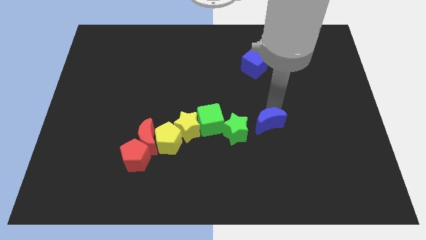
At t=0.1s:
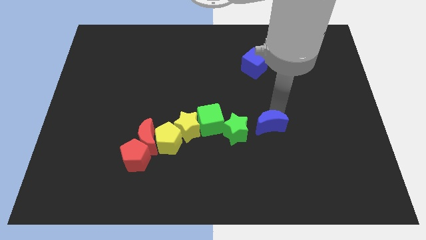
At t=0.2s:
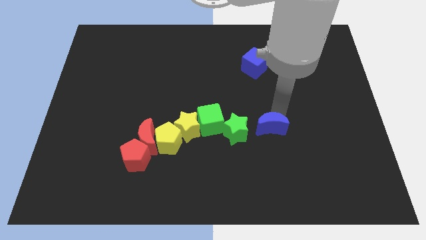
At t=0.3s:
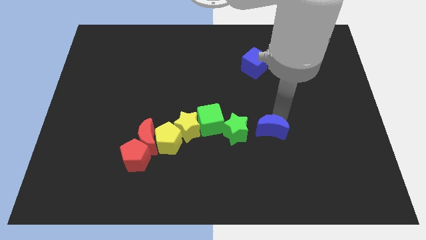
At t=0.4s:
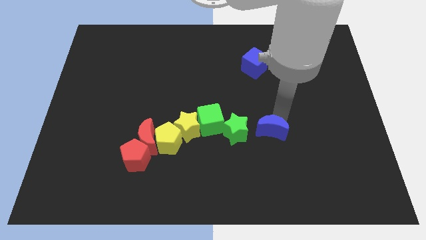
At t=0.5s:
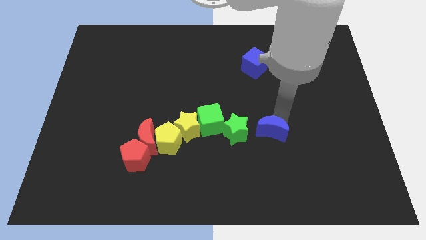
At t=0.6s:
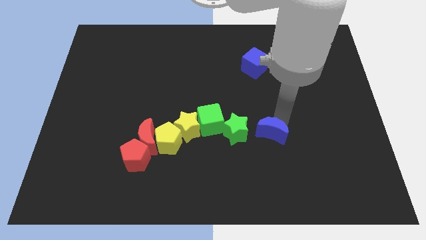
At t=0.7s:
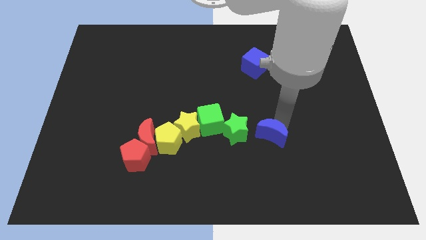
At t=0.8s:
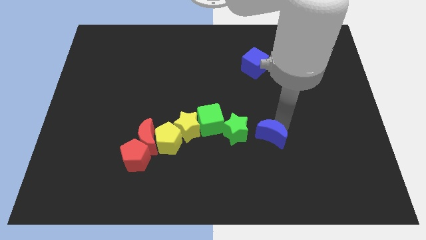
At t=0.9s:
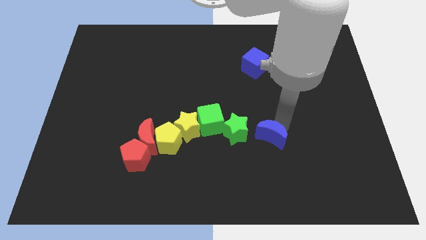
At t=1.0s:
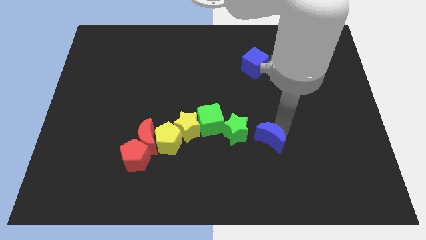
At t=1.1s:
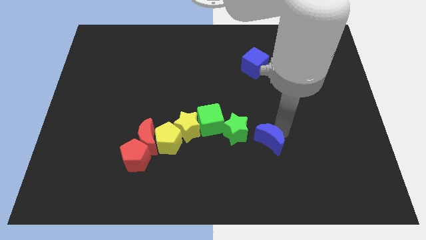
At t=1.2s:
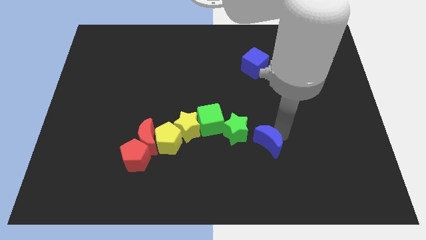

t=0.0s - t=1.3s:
push the blue crescent to the right of the green star

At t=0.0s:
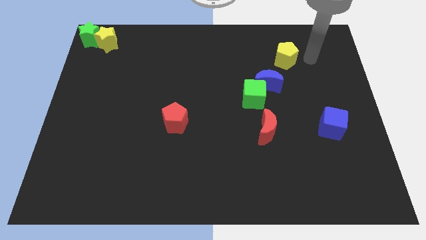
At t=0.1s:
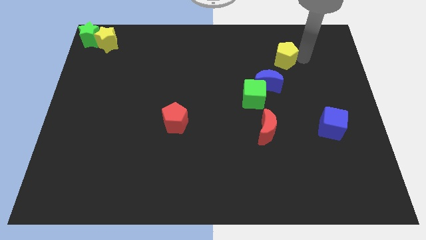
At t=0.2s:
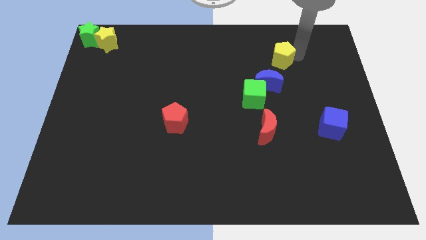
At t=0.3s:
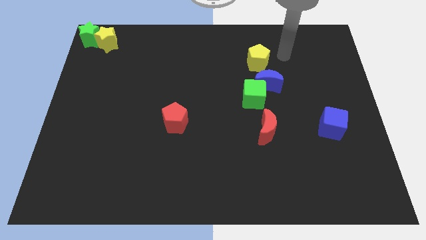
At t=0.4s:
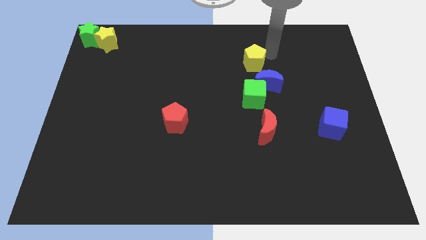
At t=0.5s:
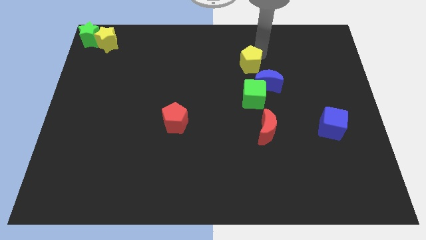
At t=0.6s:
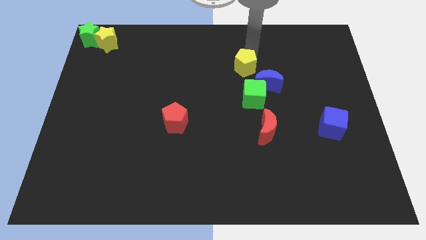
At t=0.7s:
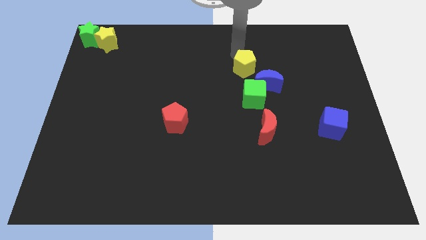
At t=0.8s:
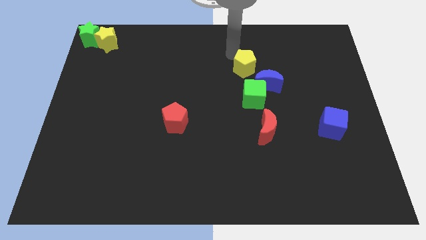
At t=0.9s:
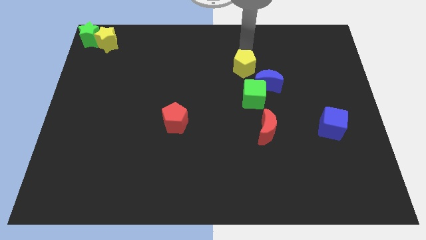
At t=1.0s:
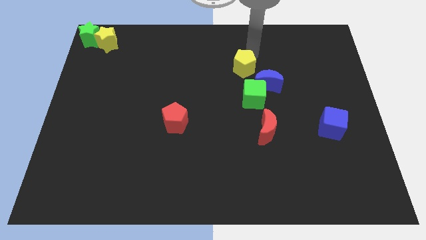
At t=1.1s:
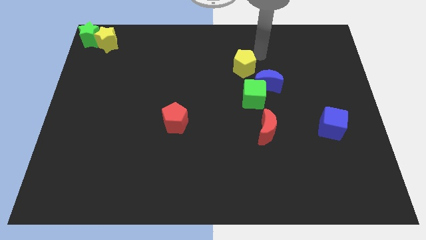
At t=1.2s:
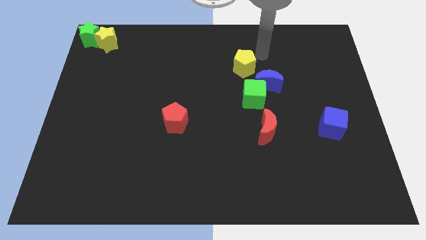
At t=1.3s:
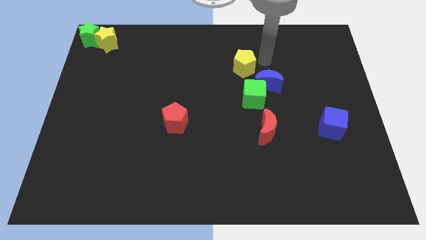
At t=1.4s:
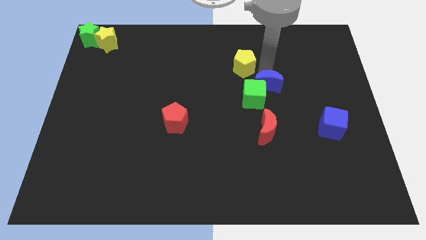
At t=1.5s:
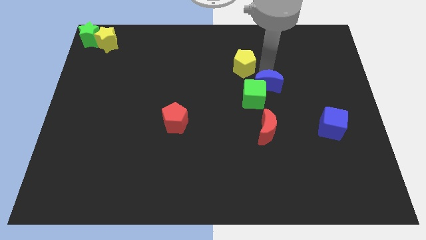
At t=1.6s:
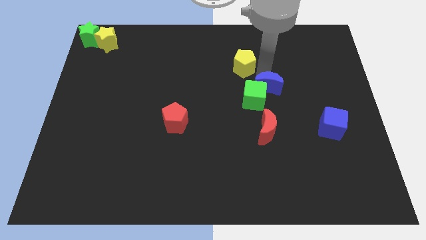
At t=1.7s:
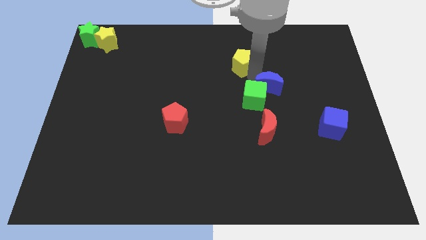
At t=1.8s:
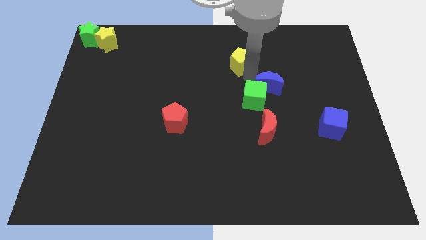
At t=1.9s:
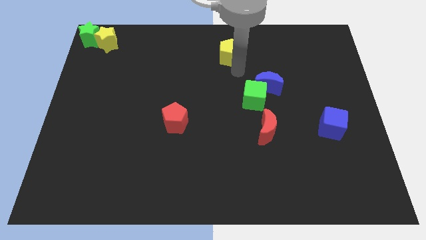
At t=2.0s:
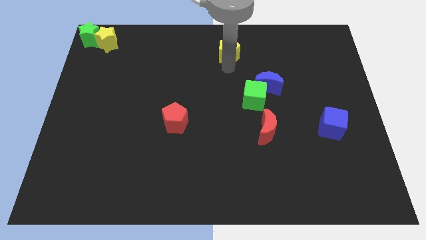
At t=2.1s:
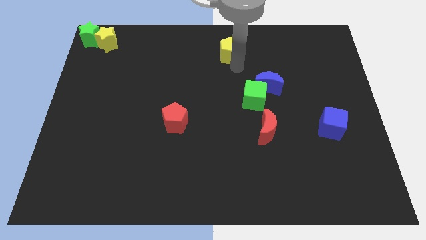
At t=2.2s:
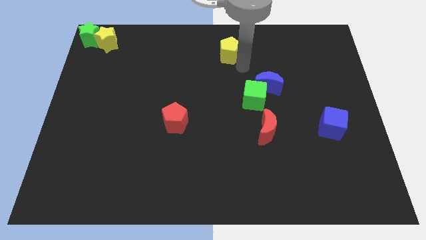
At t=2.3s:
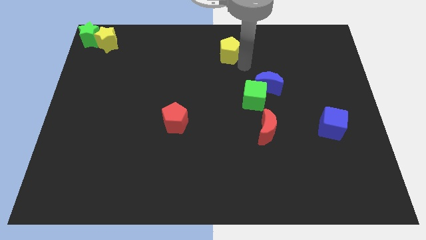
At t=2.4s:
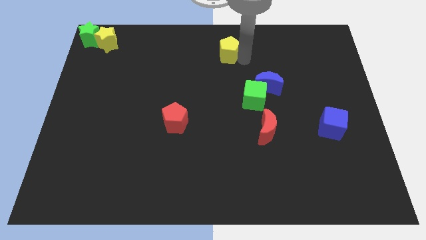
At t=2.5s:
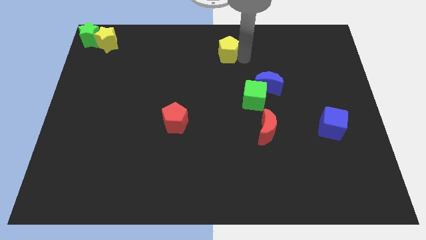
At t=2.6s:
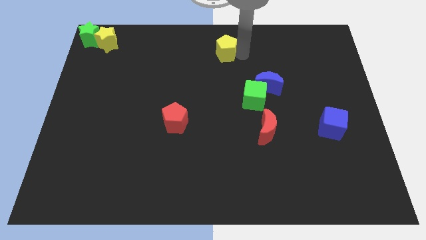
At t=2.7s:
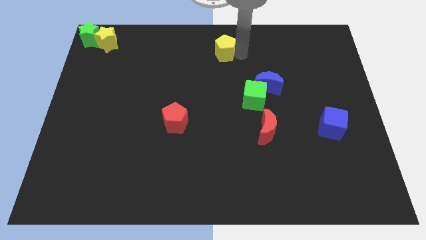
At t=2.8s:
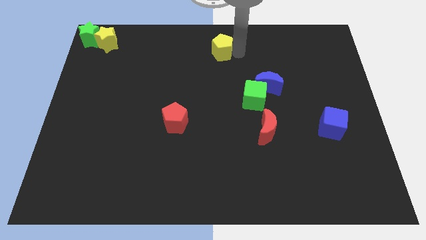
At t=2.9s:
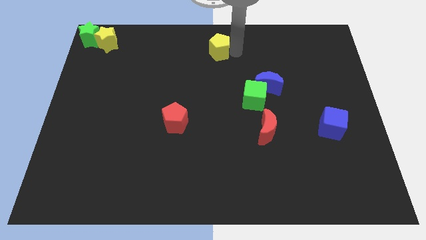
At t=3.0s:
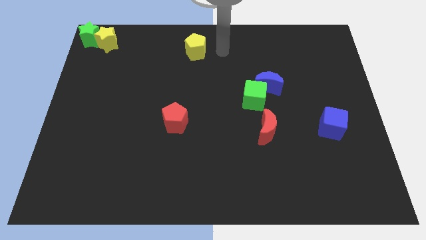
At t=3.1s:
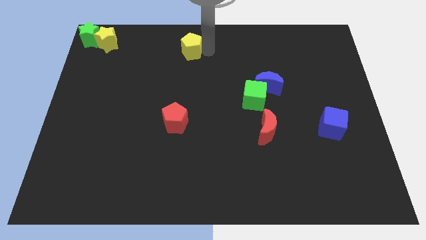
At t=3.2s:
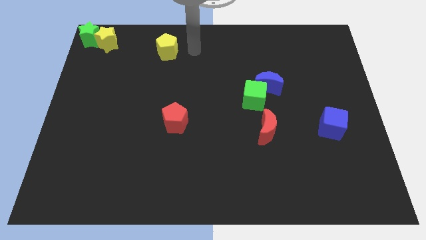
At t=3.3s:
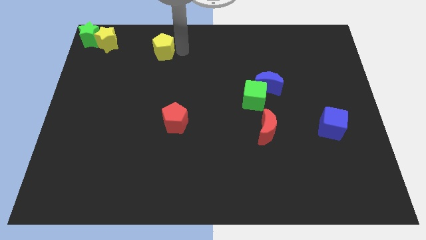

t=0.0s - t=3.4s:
push yellow pentagon towards yellow star

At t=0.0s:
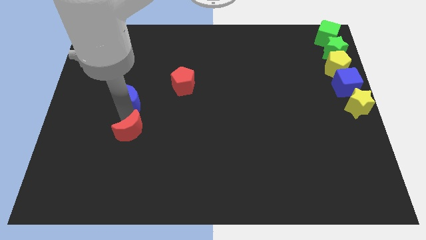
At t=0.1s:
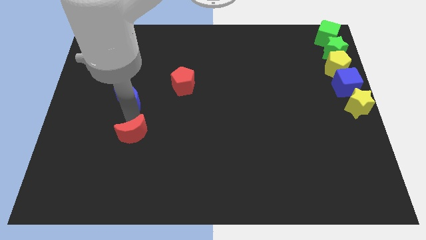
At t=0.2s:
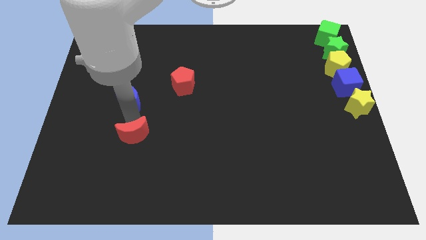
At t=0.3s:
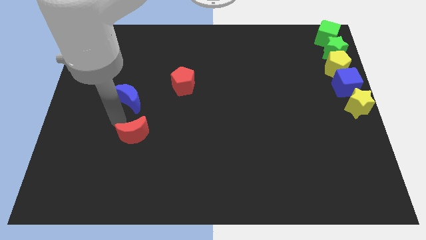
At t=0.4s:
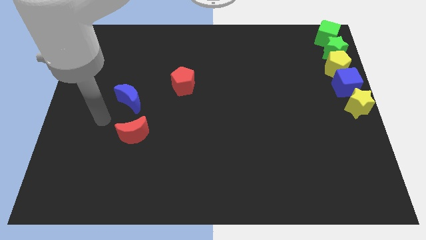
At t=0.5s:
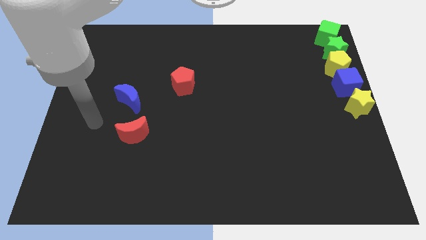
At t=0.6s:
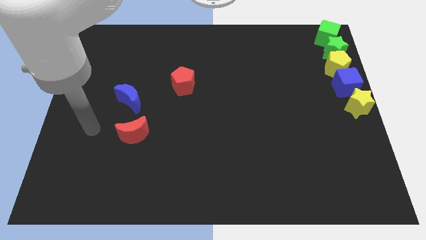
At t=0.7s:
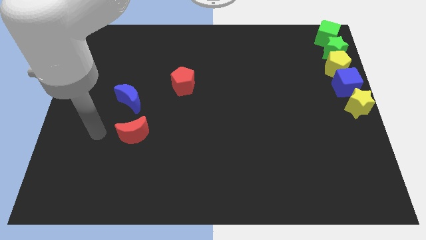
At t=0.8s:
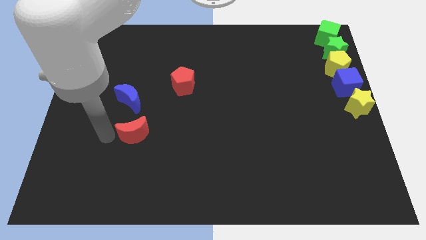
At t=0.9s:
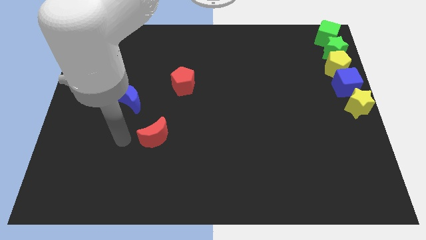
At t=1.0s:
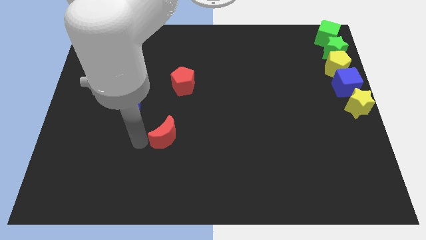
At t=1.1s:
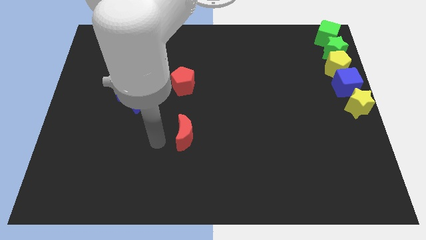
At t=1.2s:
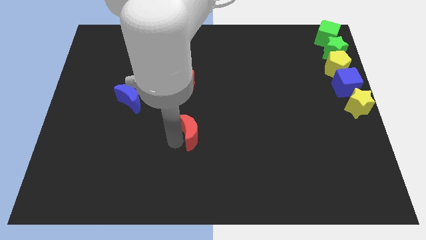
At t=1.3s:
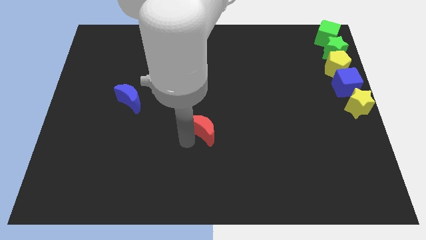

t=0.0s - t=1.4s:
push the red crescent away from the blue crescent

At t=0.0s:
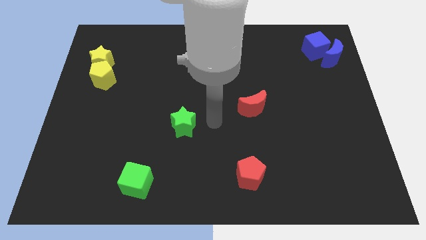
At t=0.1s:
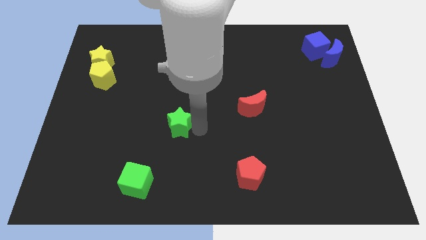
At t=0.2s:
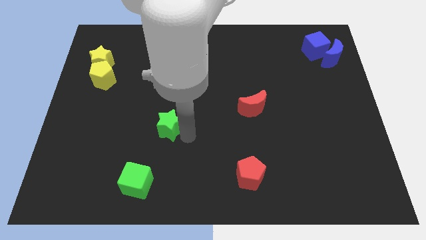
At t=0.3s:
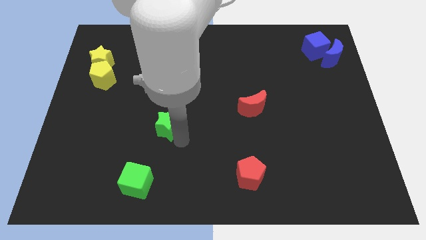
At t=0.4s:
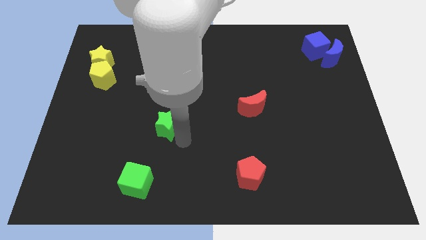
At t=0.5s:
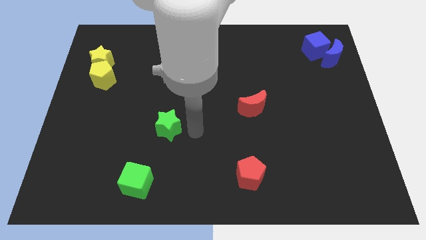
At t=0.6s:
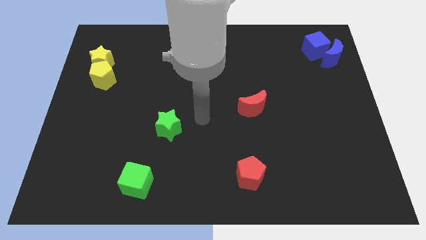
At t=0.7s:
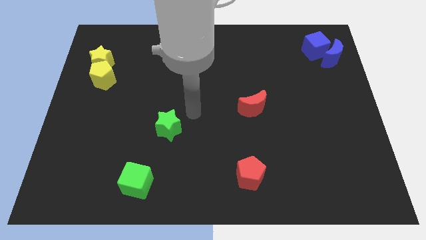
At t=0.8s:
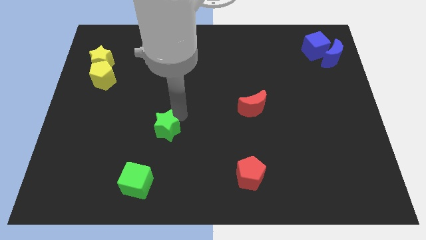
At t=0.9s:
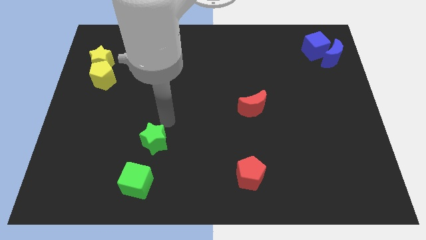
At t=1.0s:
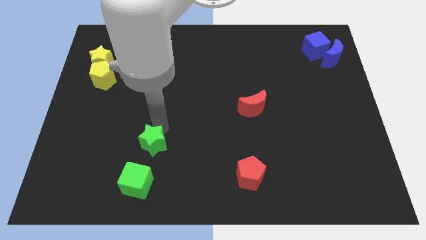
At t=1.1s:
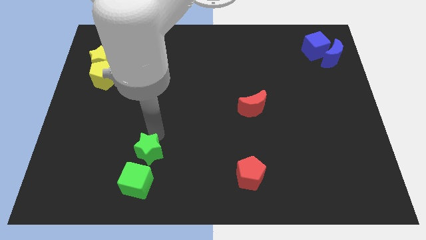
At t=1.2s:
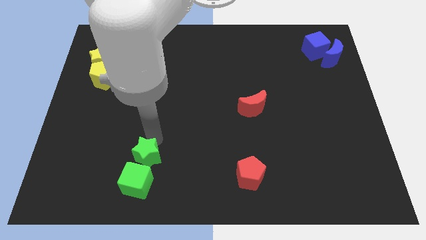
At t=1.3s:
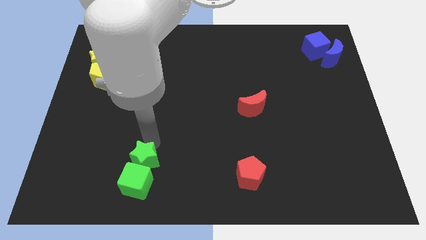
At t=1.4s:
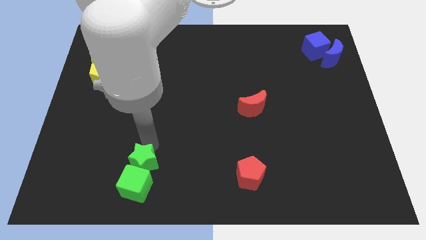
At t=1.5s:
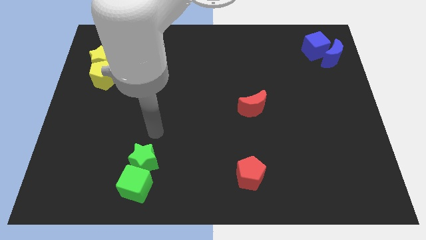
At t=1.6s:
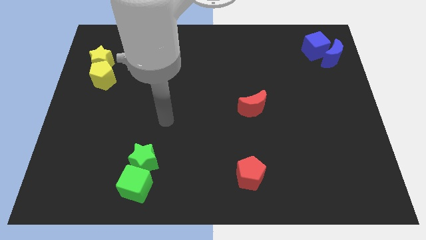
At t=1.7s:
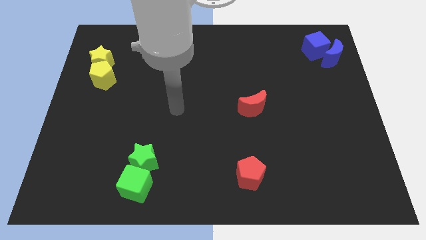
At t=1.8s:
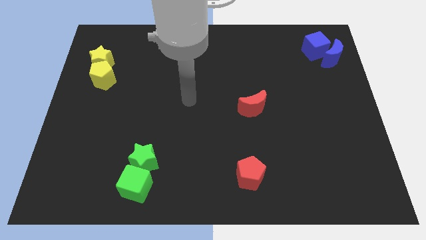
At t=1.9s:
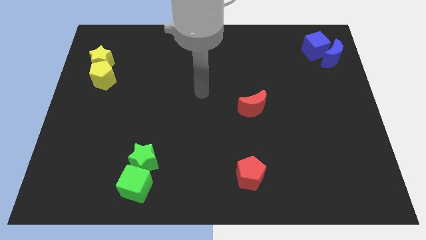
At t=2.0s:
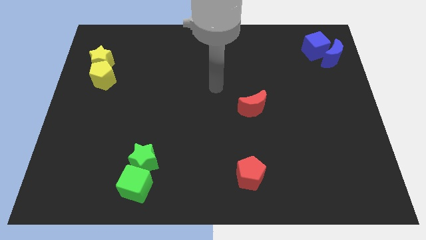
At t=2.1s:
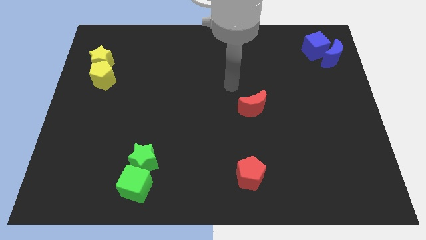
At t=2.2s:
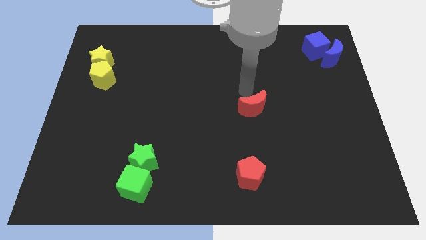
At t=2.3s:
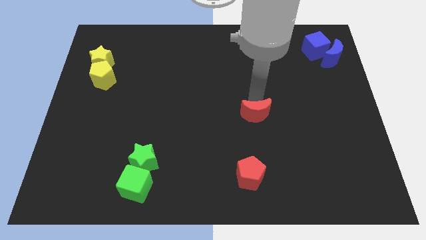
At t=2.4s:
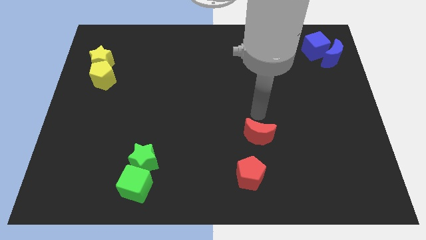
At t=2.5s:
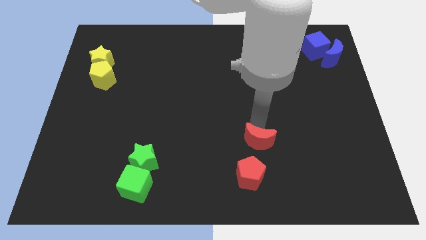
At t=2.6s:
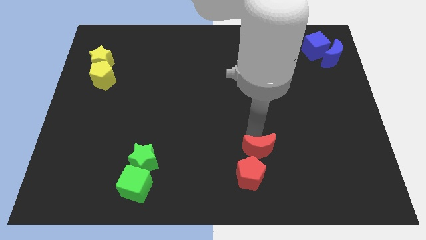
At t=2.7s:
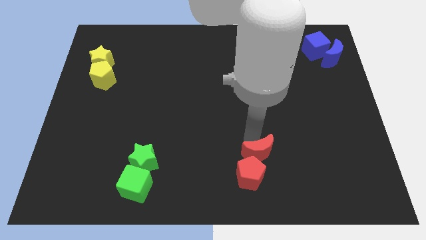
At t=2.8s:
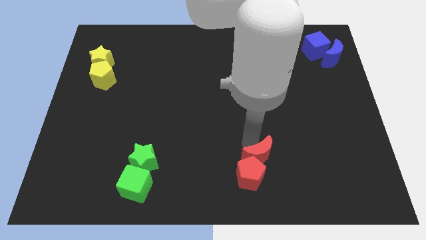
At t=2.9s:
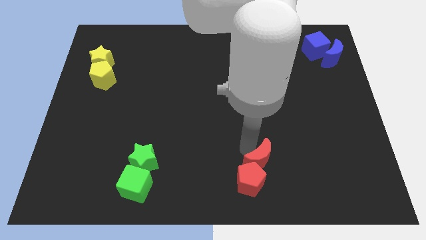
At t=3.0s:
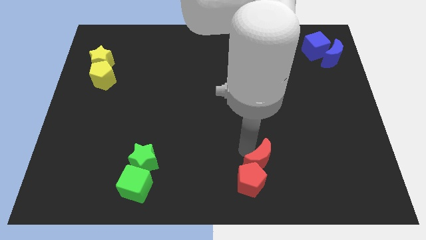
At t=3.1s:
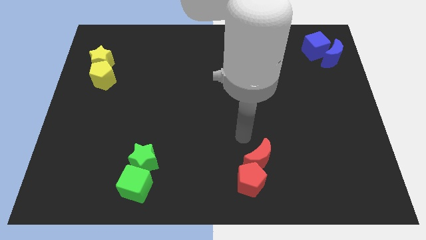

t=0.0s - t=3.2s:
slide green star on green cube along with red moon on red pentagon
